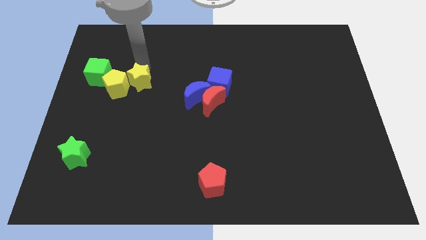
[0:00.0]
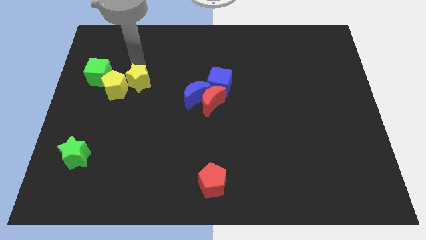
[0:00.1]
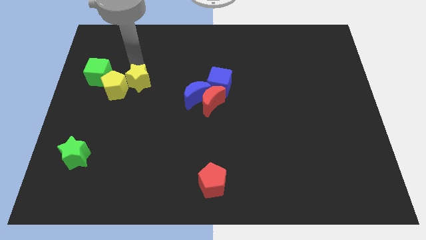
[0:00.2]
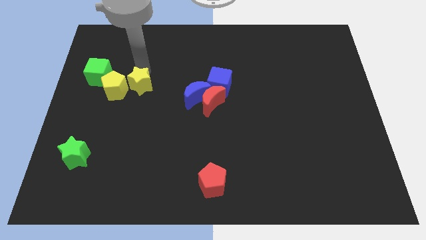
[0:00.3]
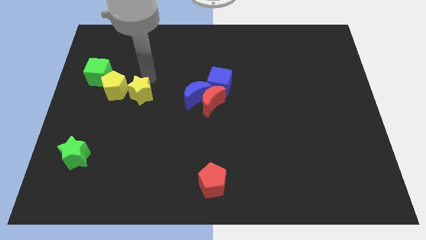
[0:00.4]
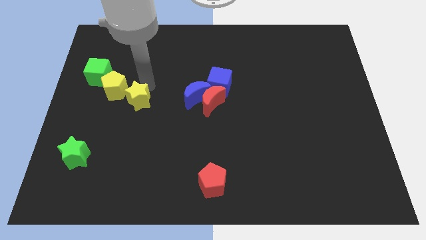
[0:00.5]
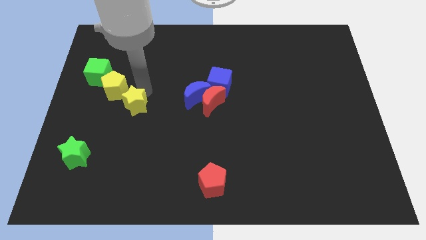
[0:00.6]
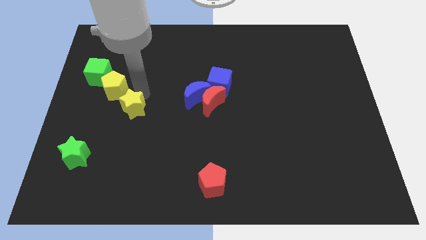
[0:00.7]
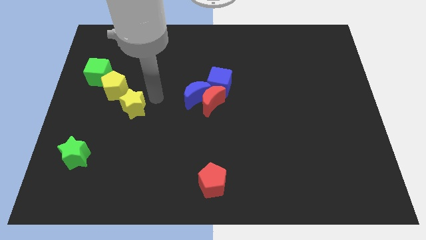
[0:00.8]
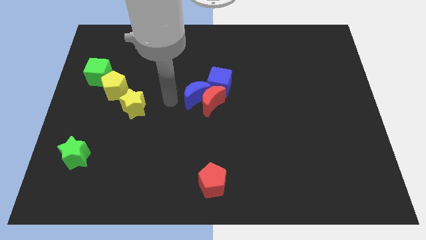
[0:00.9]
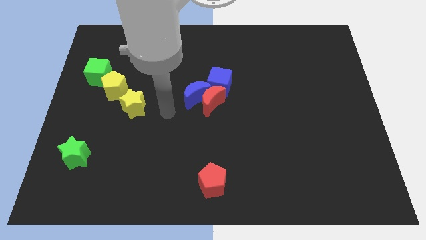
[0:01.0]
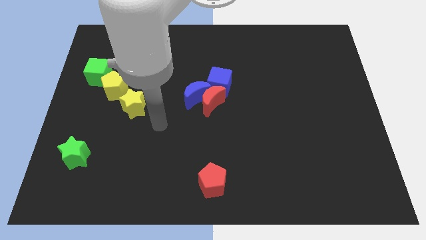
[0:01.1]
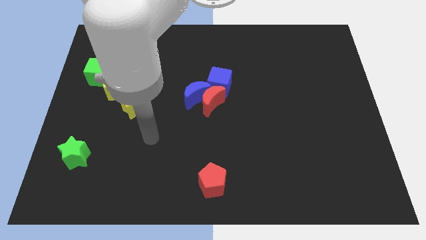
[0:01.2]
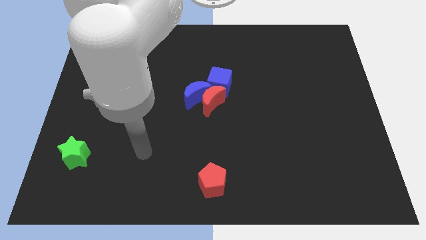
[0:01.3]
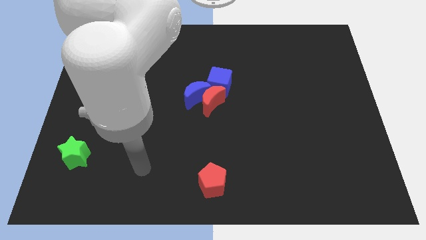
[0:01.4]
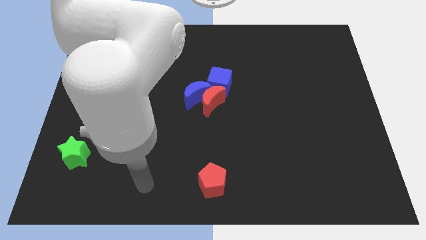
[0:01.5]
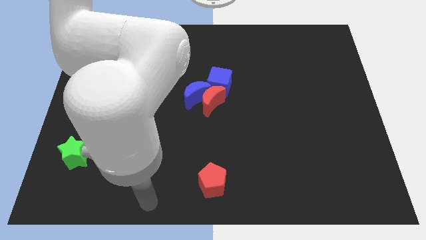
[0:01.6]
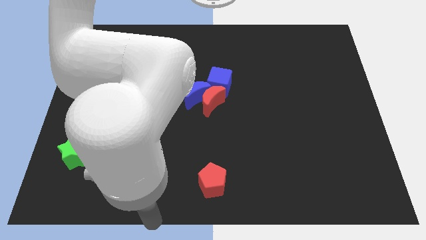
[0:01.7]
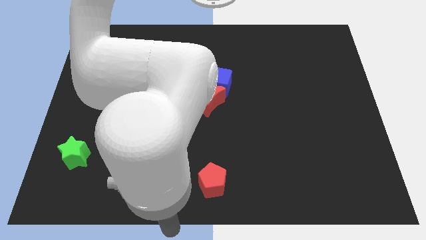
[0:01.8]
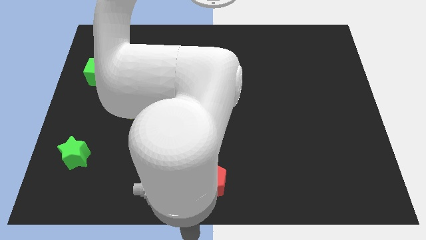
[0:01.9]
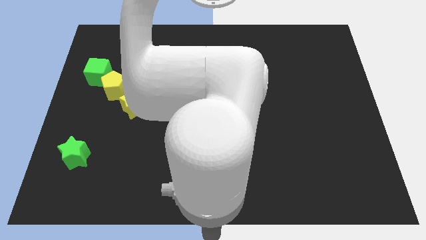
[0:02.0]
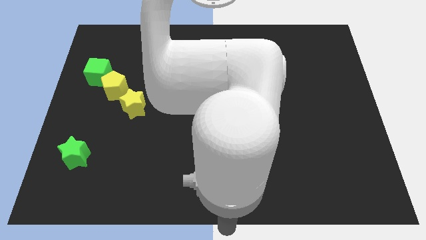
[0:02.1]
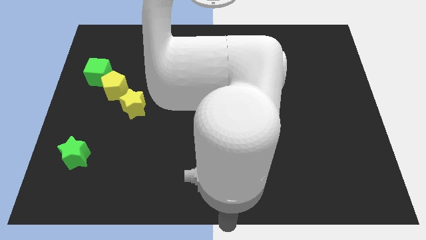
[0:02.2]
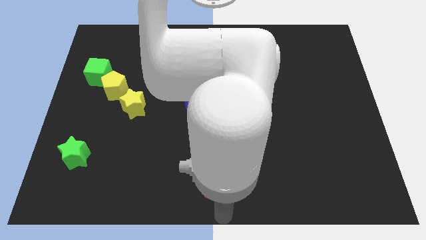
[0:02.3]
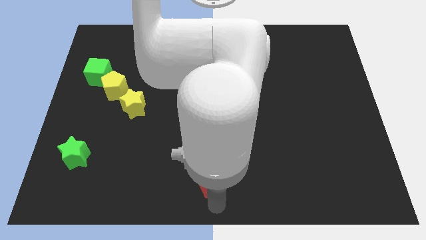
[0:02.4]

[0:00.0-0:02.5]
place the yellow star to the bottom right of the yellow pentagon

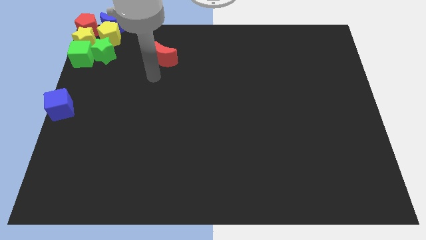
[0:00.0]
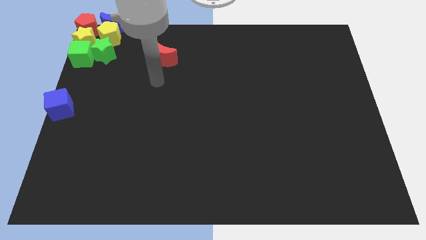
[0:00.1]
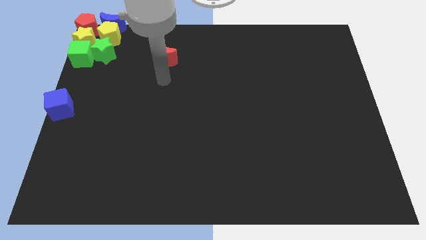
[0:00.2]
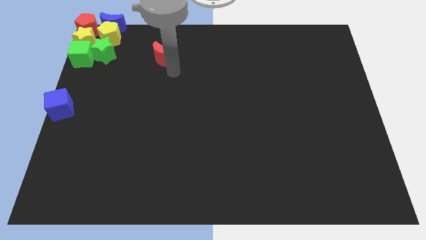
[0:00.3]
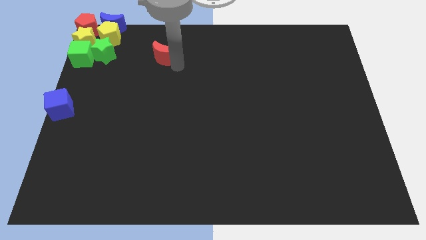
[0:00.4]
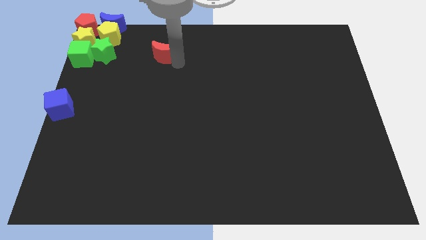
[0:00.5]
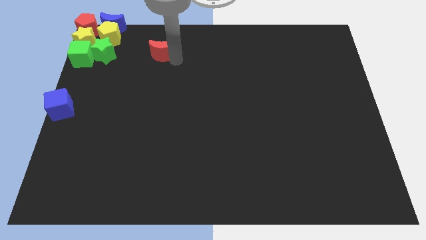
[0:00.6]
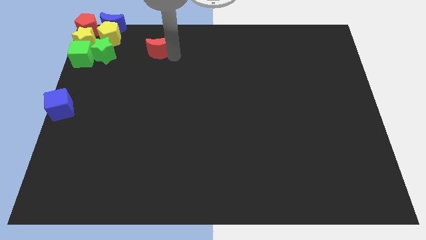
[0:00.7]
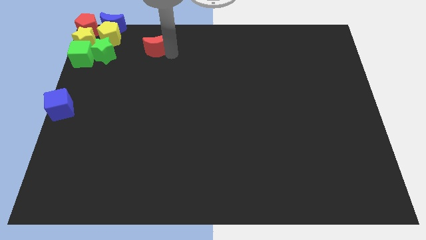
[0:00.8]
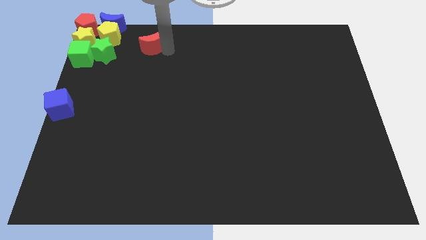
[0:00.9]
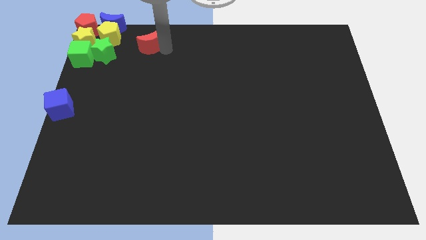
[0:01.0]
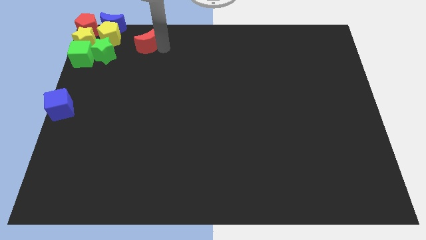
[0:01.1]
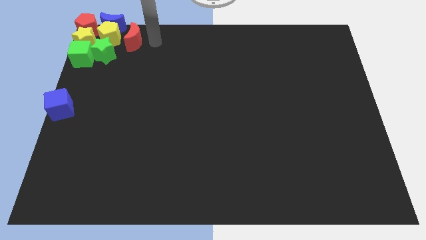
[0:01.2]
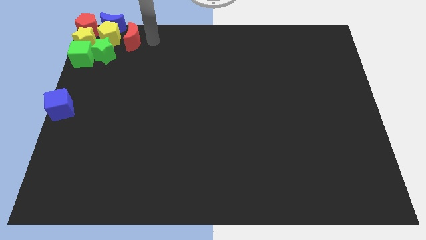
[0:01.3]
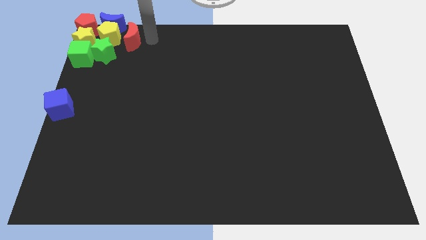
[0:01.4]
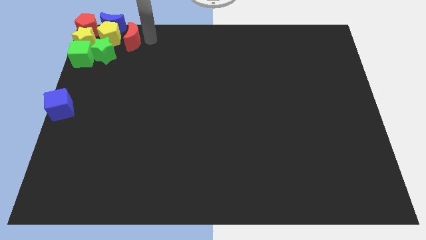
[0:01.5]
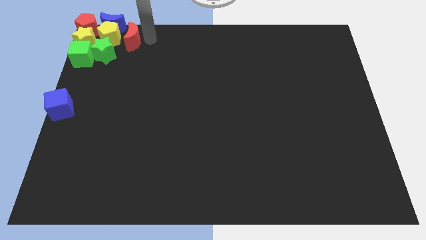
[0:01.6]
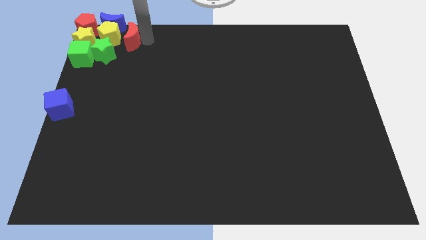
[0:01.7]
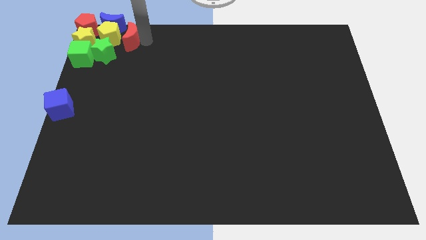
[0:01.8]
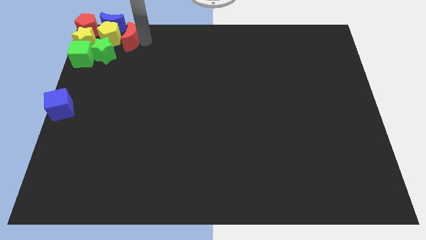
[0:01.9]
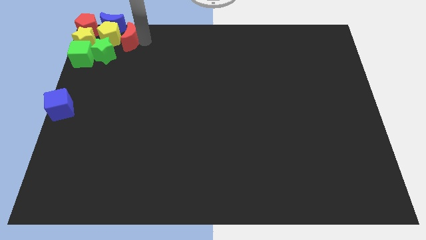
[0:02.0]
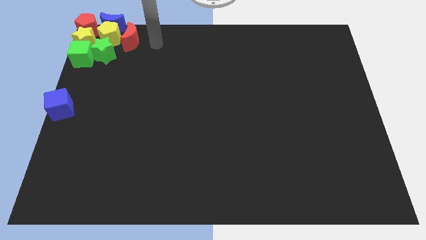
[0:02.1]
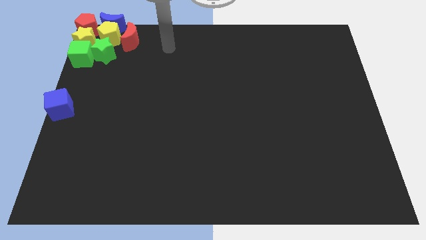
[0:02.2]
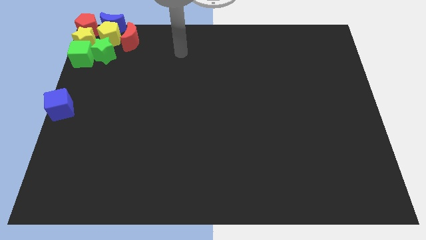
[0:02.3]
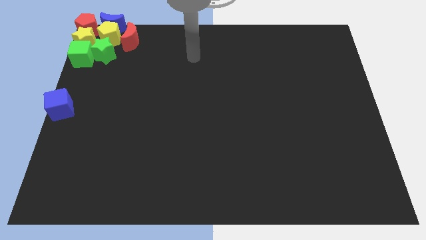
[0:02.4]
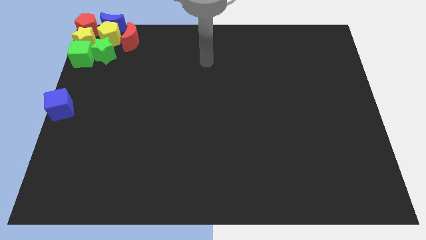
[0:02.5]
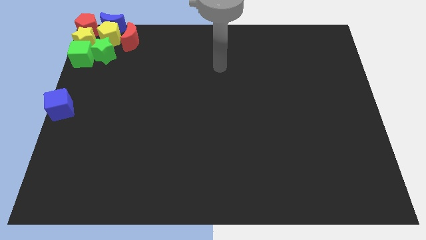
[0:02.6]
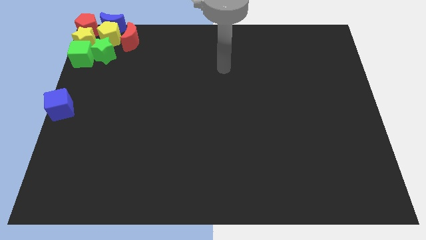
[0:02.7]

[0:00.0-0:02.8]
place the red crescent right to the yellow pentagon

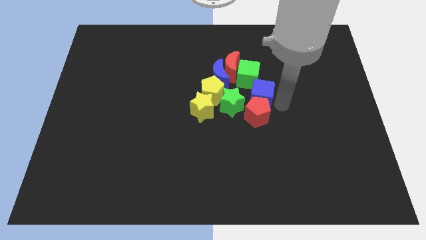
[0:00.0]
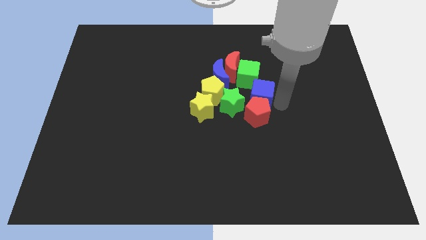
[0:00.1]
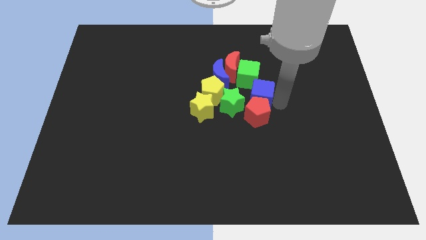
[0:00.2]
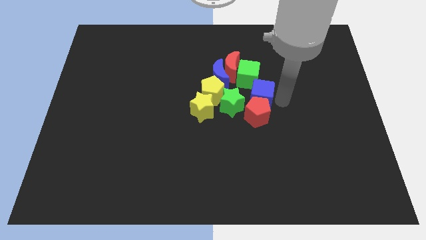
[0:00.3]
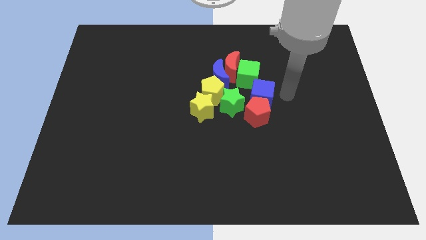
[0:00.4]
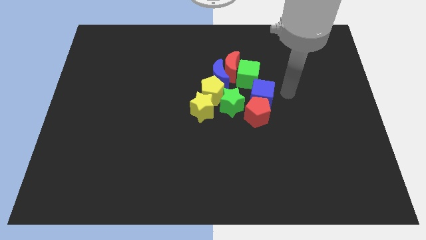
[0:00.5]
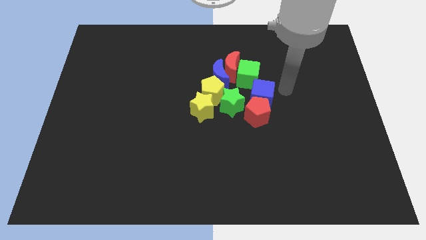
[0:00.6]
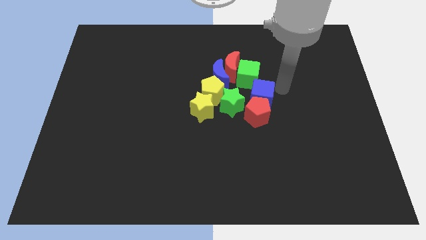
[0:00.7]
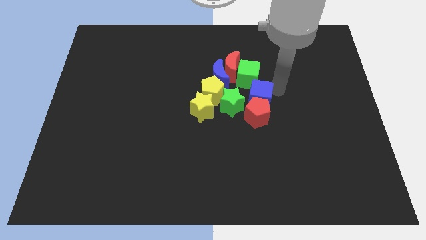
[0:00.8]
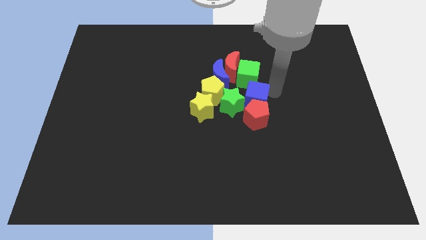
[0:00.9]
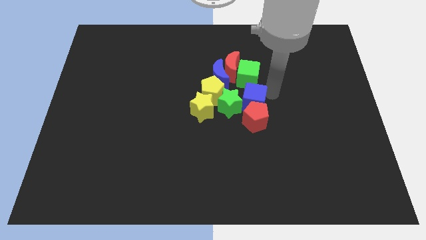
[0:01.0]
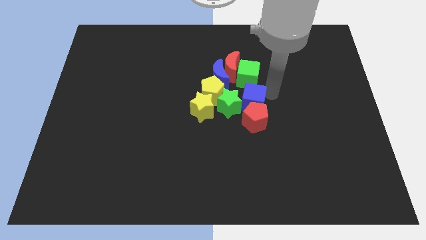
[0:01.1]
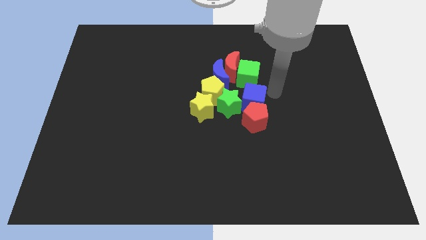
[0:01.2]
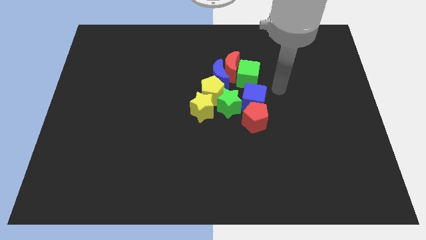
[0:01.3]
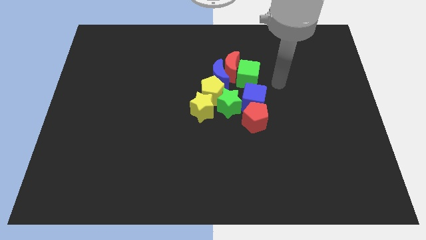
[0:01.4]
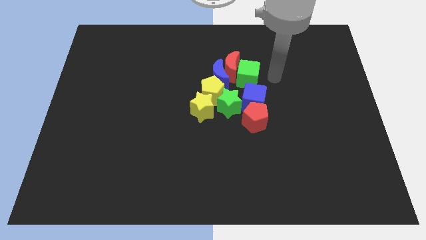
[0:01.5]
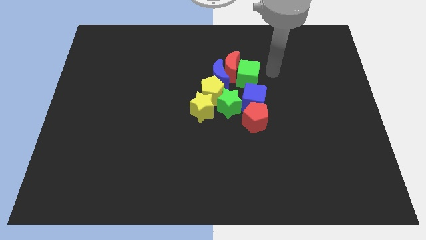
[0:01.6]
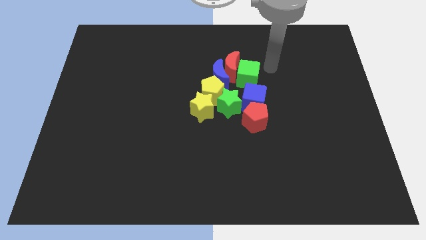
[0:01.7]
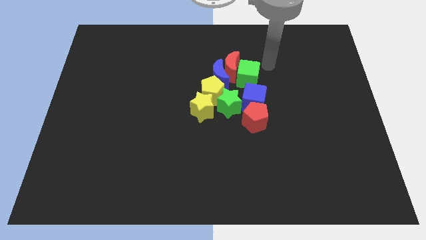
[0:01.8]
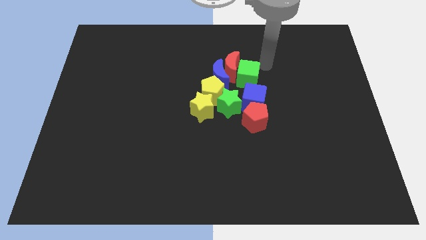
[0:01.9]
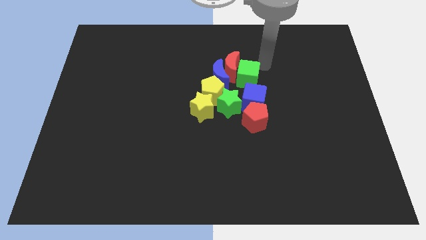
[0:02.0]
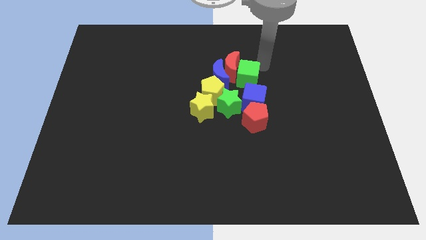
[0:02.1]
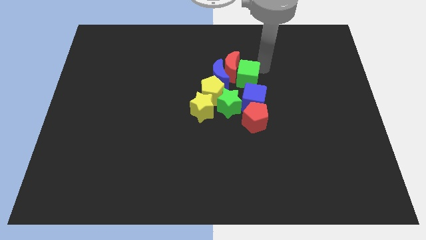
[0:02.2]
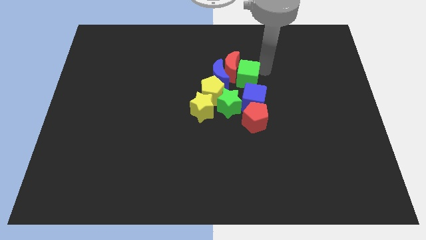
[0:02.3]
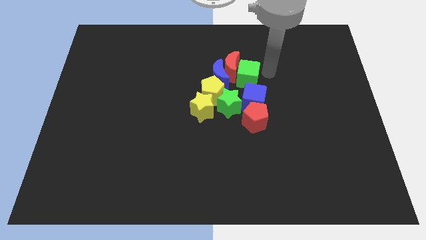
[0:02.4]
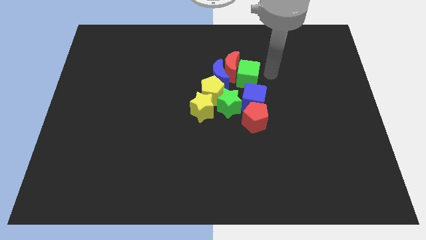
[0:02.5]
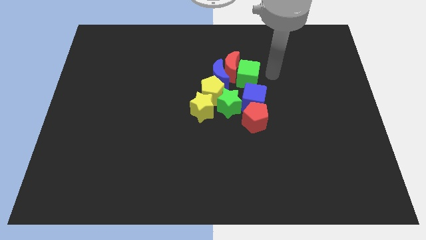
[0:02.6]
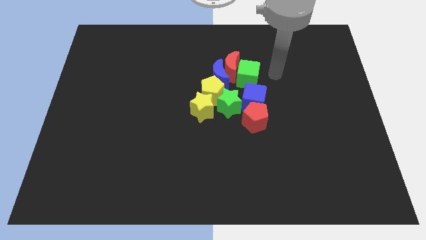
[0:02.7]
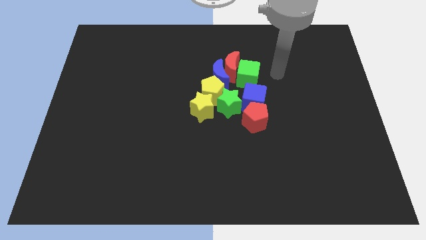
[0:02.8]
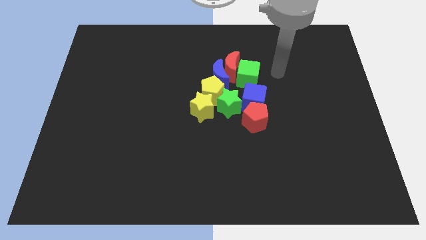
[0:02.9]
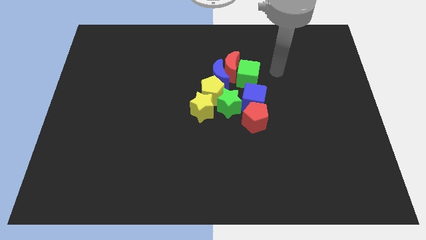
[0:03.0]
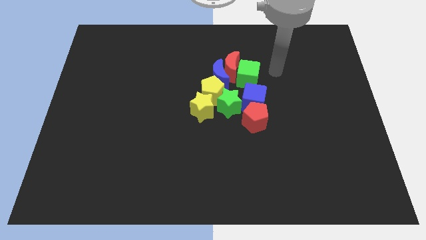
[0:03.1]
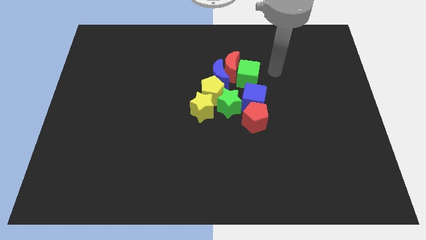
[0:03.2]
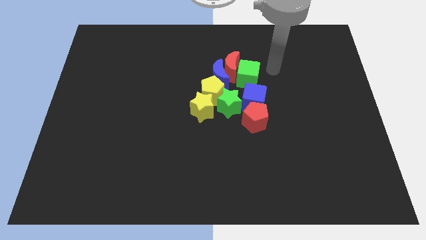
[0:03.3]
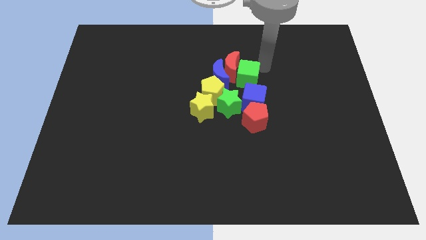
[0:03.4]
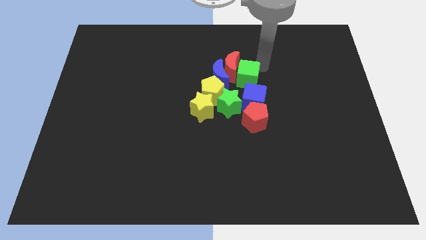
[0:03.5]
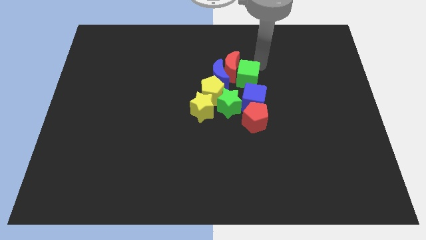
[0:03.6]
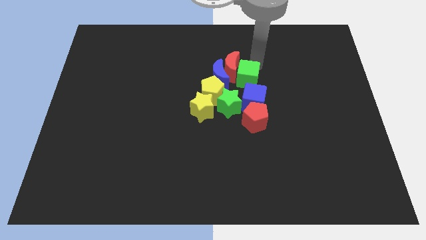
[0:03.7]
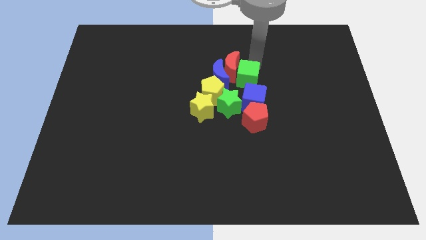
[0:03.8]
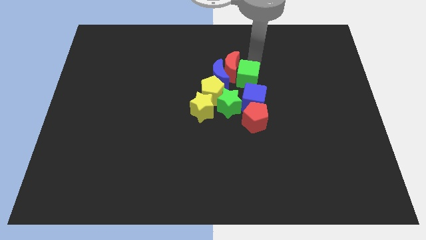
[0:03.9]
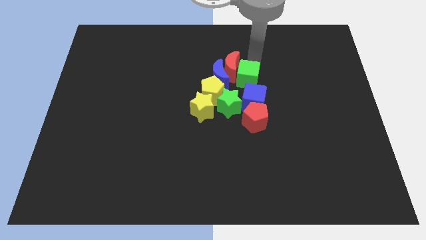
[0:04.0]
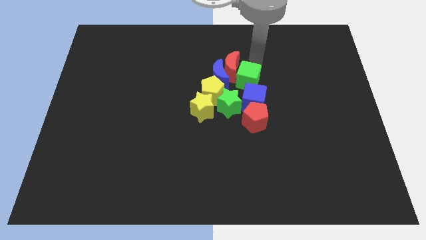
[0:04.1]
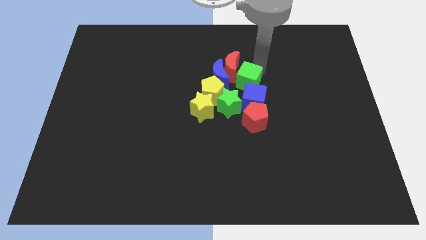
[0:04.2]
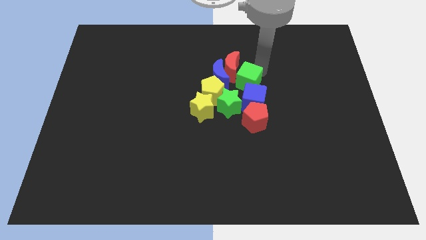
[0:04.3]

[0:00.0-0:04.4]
move arm near green cube
